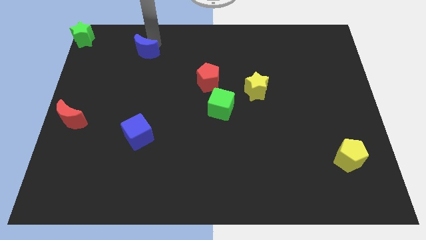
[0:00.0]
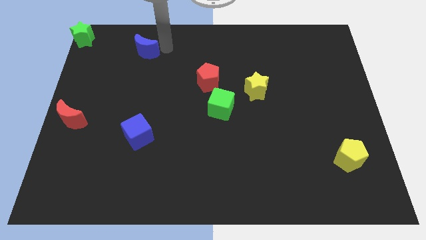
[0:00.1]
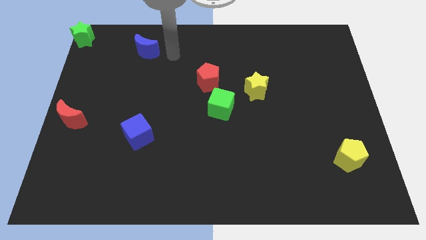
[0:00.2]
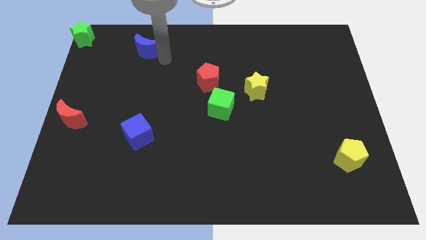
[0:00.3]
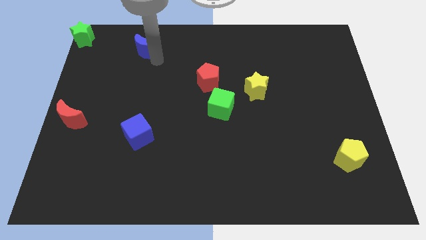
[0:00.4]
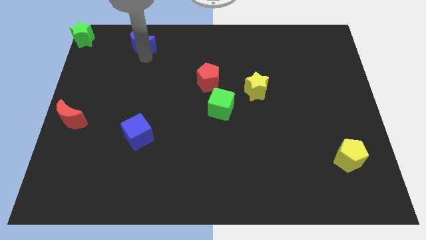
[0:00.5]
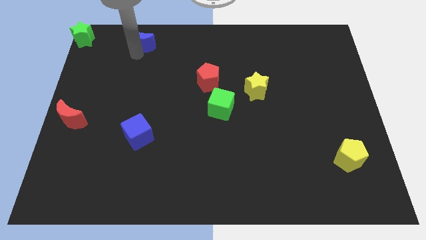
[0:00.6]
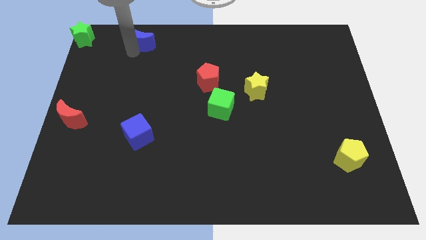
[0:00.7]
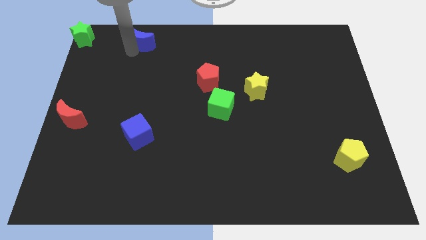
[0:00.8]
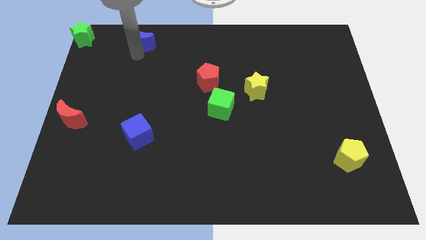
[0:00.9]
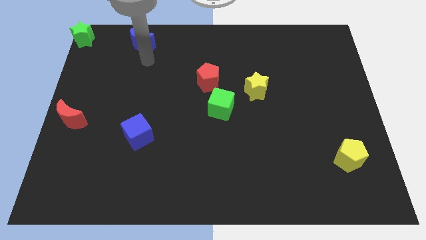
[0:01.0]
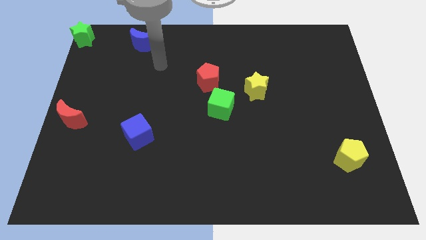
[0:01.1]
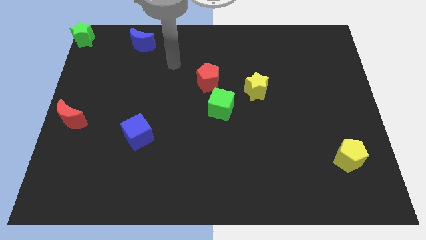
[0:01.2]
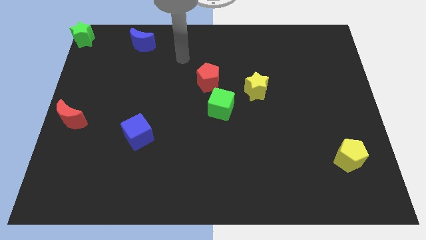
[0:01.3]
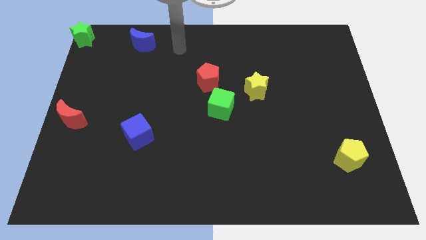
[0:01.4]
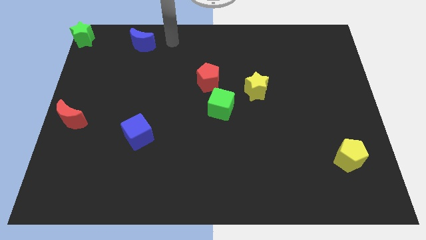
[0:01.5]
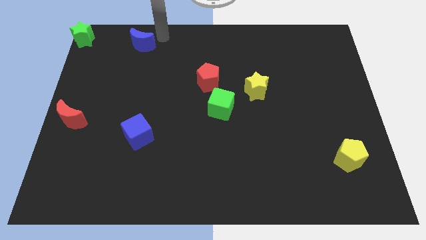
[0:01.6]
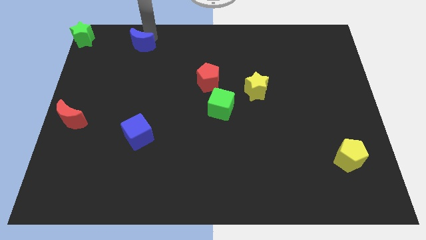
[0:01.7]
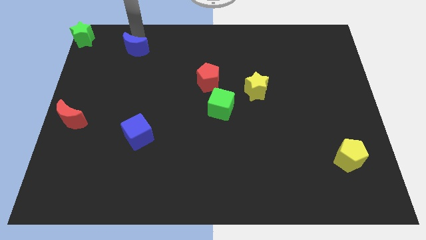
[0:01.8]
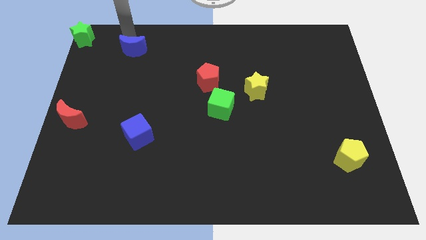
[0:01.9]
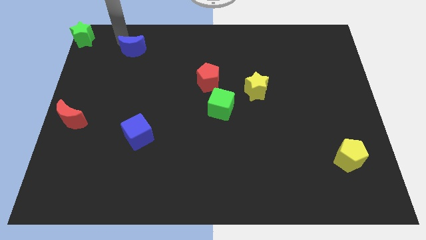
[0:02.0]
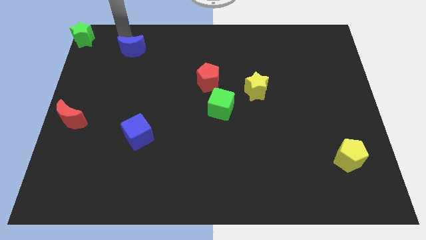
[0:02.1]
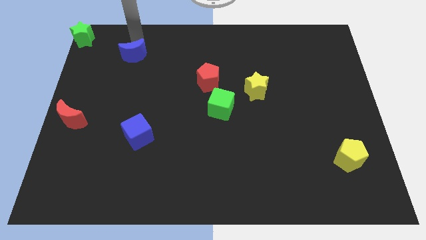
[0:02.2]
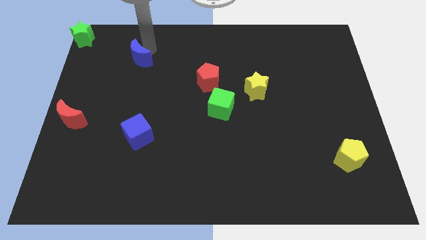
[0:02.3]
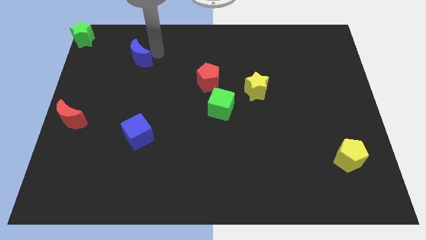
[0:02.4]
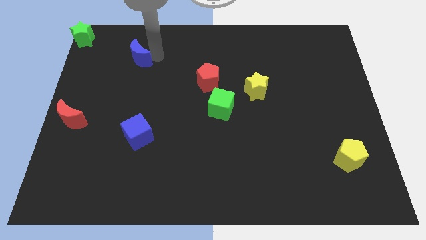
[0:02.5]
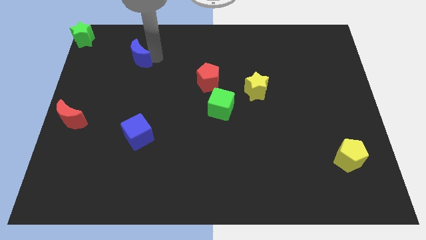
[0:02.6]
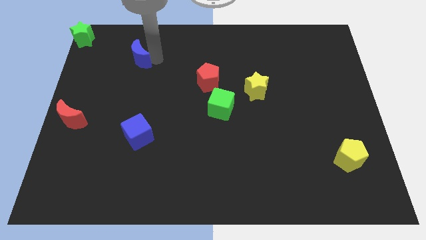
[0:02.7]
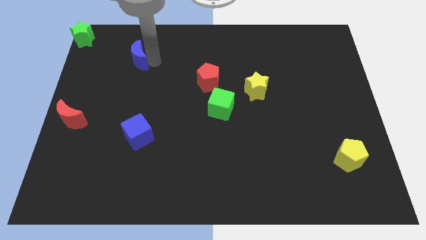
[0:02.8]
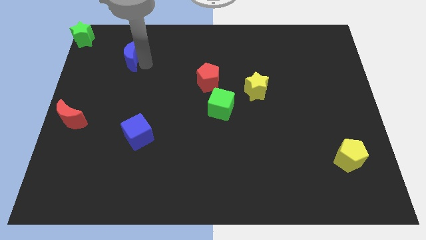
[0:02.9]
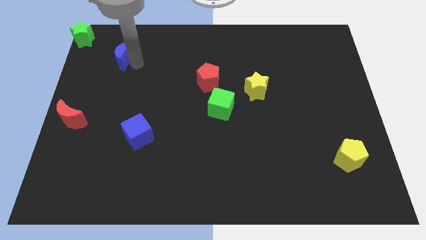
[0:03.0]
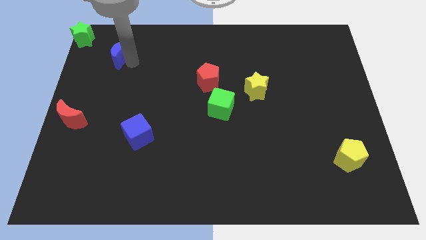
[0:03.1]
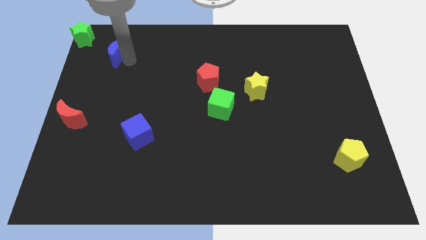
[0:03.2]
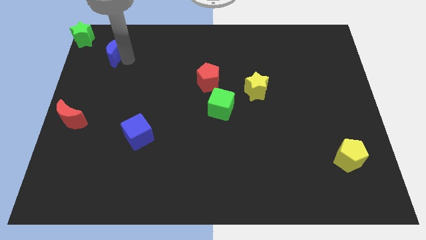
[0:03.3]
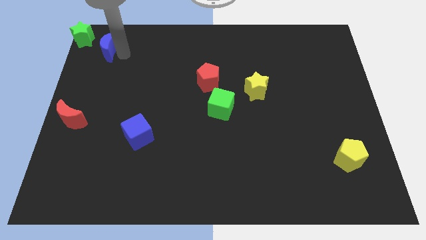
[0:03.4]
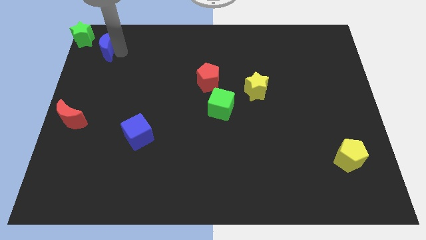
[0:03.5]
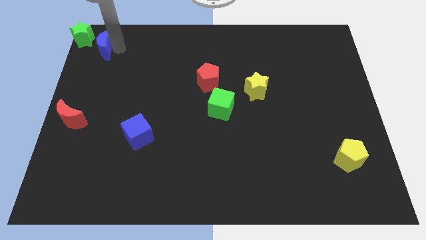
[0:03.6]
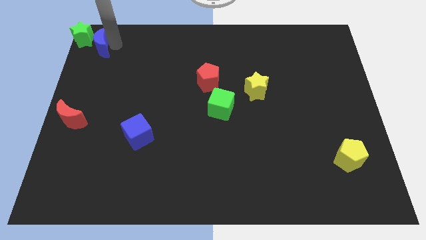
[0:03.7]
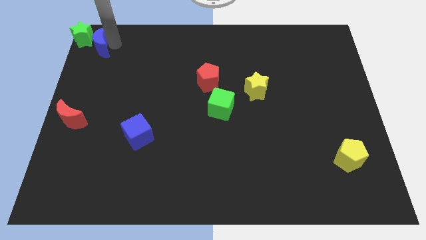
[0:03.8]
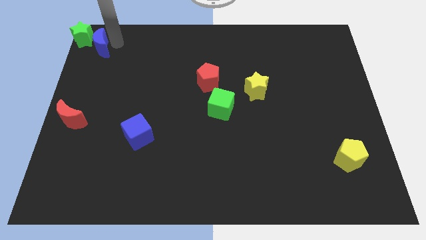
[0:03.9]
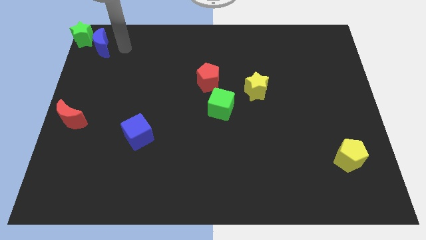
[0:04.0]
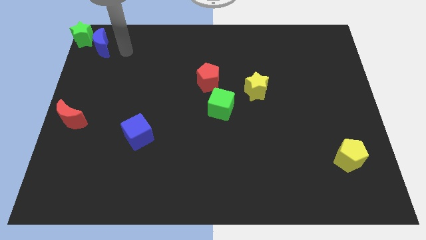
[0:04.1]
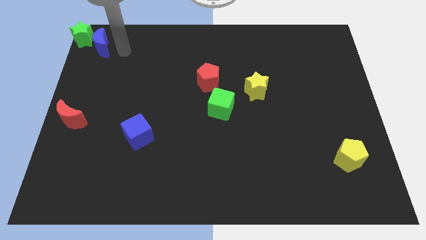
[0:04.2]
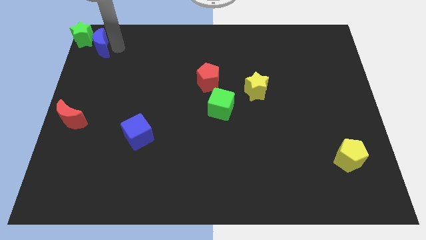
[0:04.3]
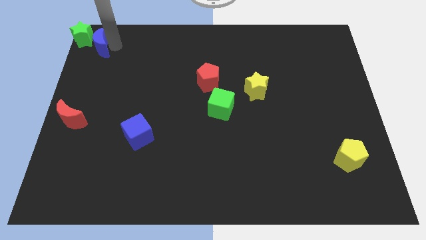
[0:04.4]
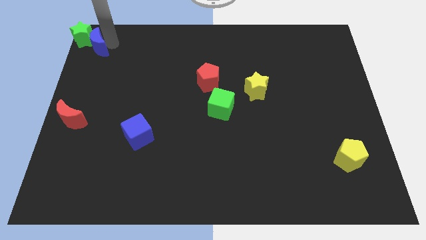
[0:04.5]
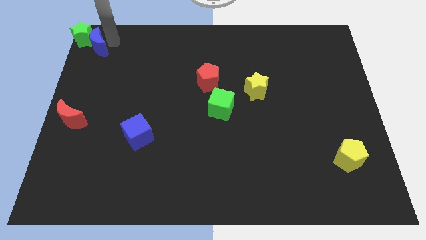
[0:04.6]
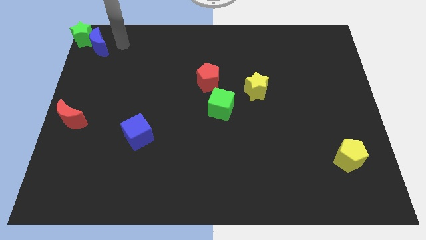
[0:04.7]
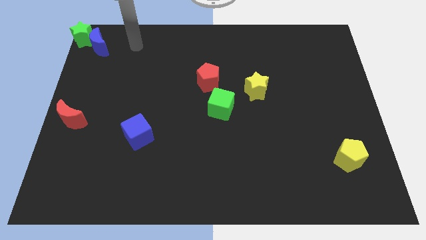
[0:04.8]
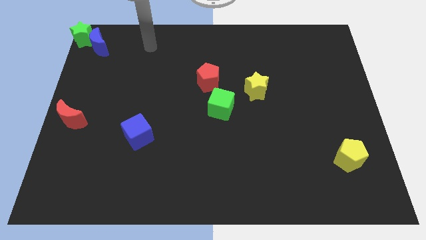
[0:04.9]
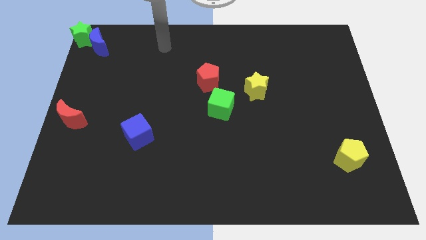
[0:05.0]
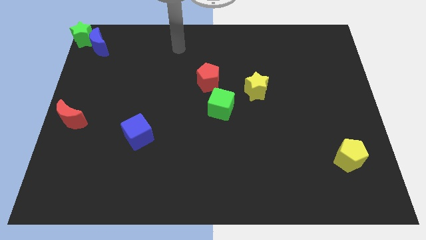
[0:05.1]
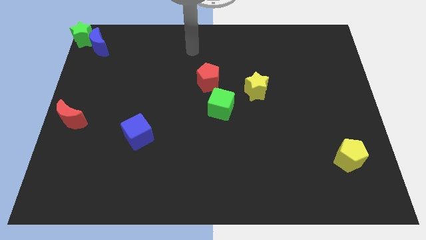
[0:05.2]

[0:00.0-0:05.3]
push the blue crescent to the right of the green star

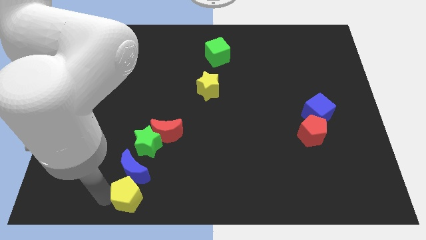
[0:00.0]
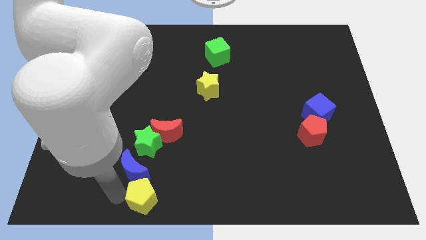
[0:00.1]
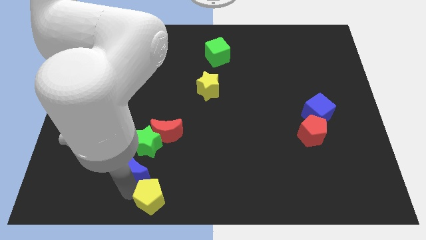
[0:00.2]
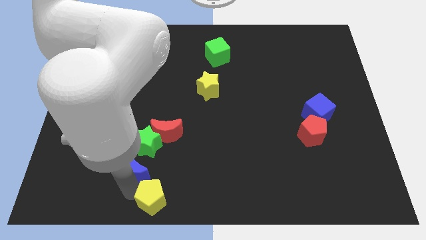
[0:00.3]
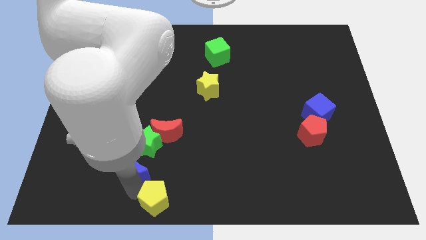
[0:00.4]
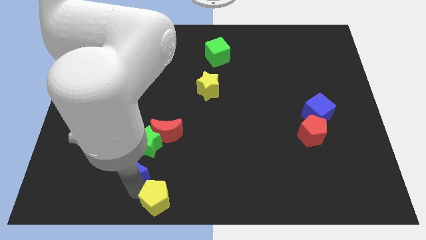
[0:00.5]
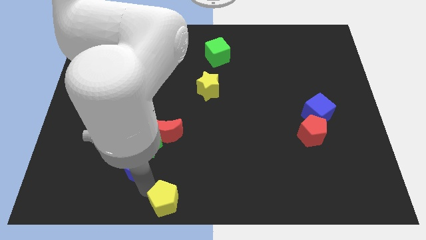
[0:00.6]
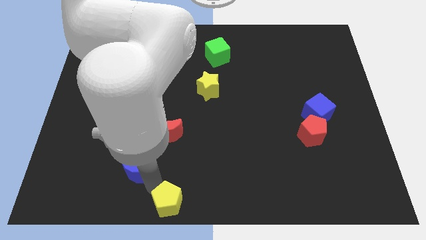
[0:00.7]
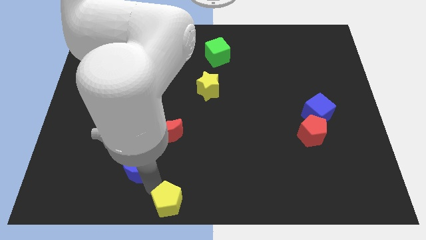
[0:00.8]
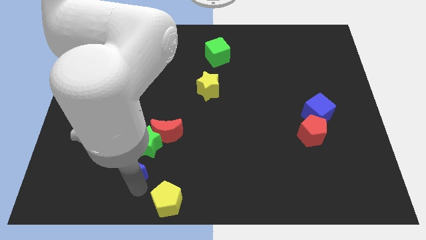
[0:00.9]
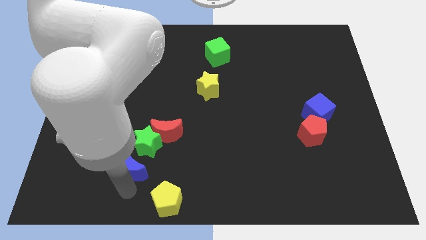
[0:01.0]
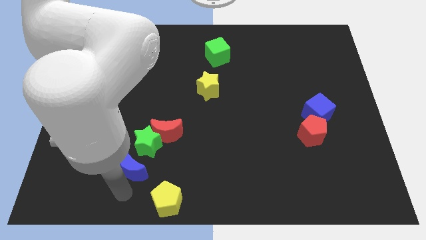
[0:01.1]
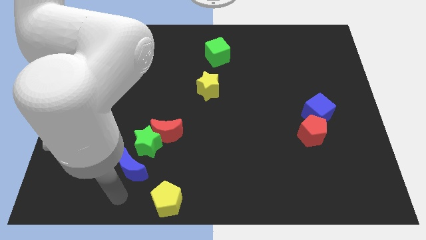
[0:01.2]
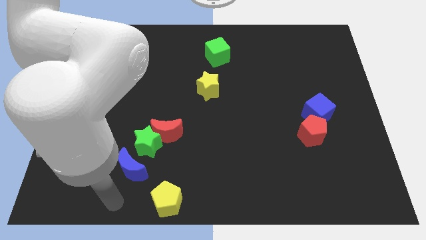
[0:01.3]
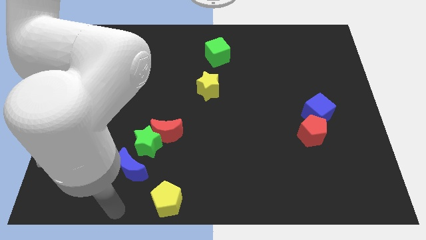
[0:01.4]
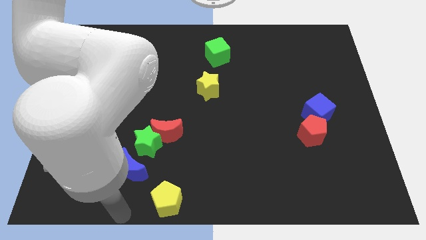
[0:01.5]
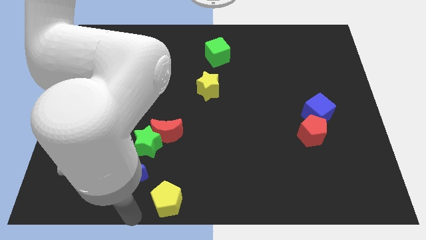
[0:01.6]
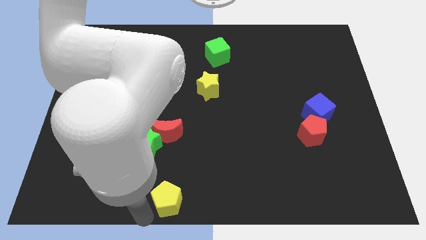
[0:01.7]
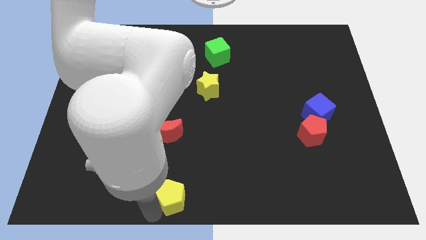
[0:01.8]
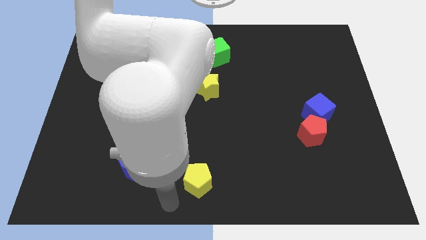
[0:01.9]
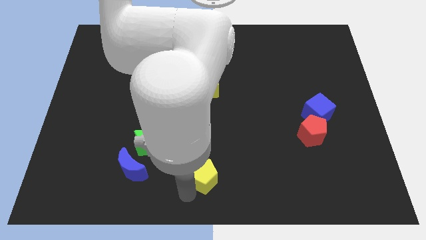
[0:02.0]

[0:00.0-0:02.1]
move the yellow pentagon to the right of the blue crescent

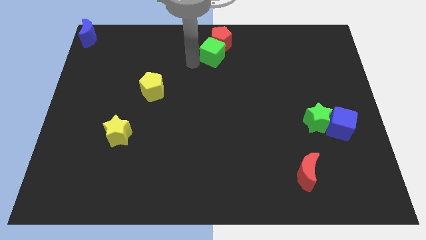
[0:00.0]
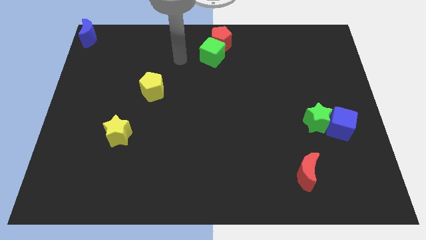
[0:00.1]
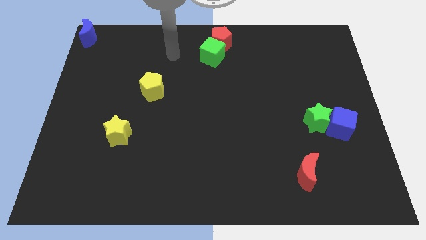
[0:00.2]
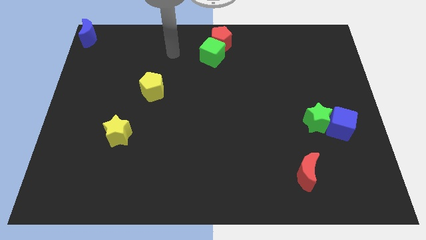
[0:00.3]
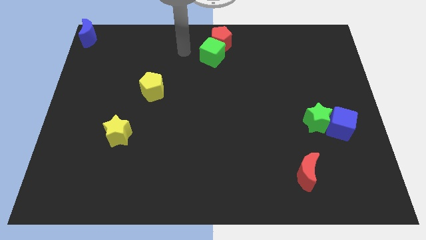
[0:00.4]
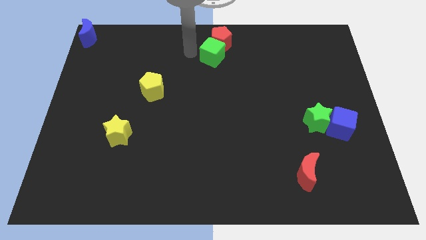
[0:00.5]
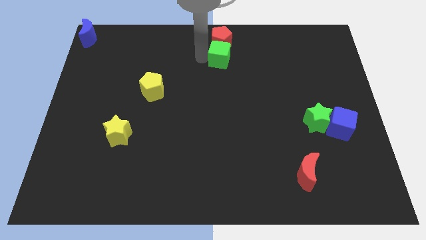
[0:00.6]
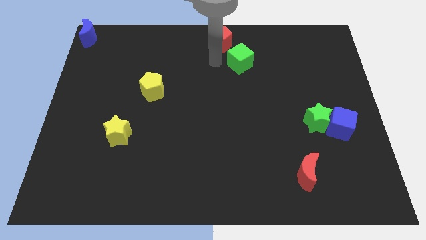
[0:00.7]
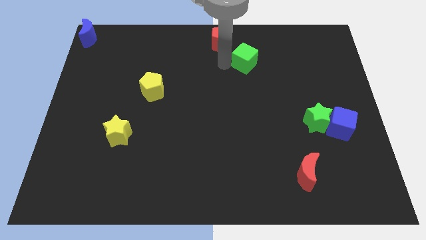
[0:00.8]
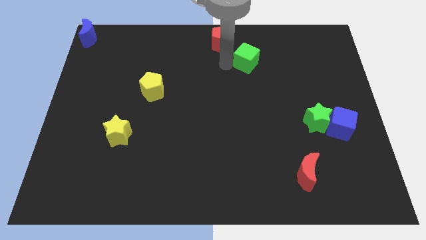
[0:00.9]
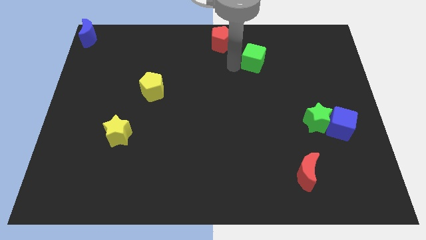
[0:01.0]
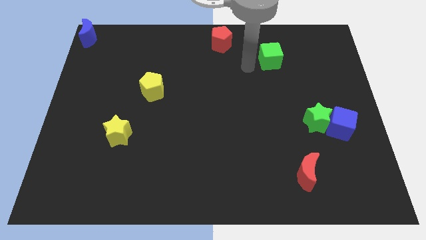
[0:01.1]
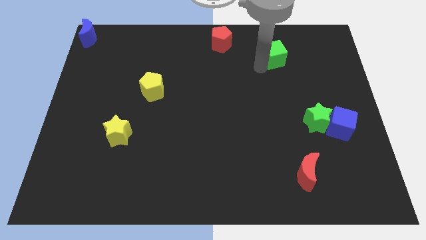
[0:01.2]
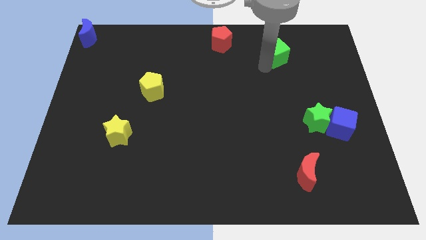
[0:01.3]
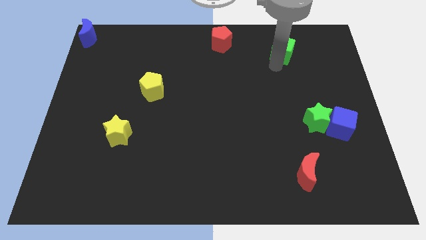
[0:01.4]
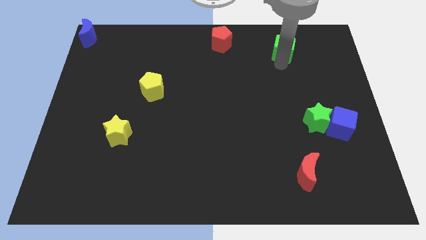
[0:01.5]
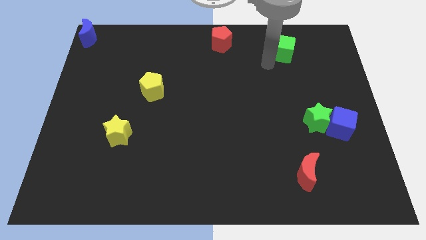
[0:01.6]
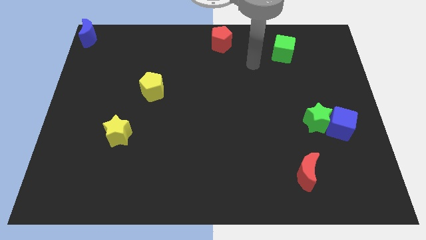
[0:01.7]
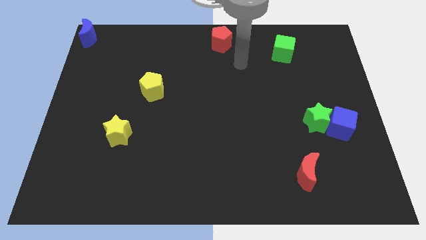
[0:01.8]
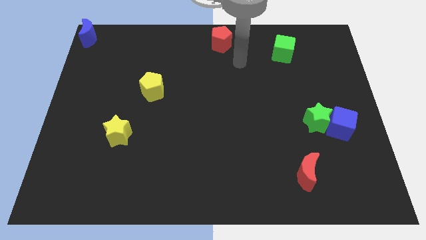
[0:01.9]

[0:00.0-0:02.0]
move the green cube towards the right of the board
